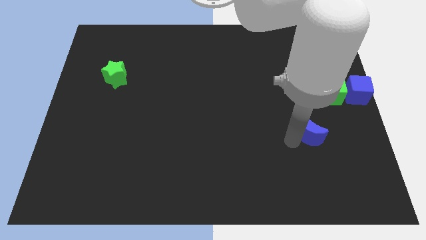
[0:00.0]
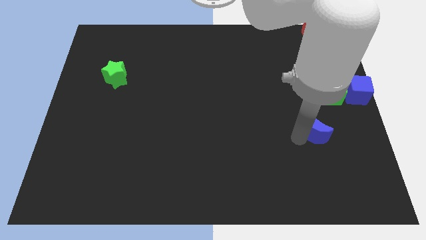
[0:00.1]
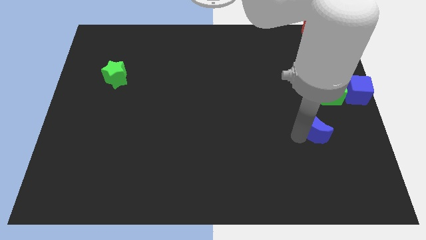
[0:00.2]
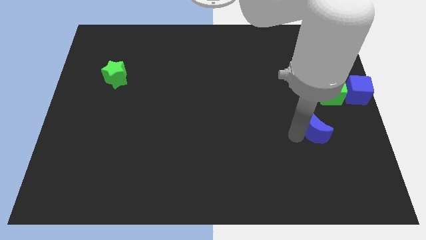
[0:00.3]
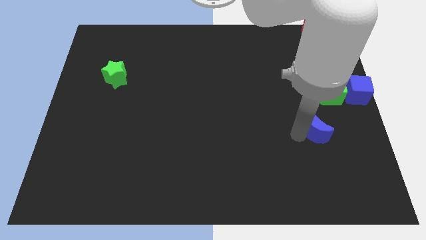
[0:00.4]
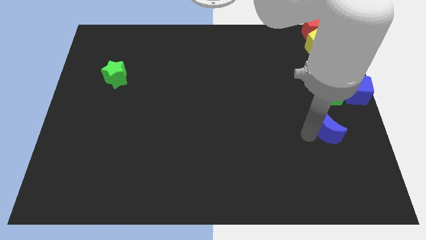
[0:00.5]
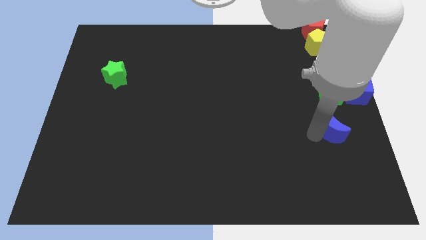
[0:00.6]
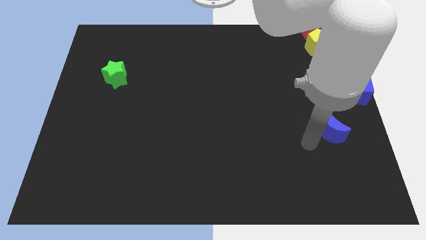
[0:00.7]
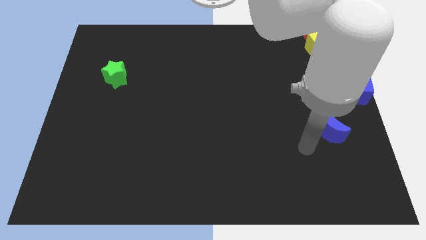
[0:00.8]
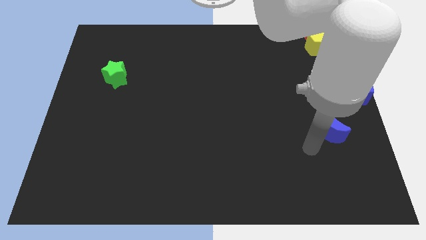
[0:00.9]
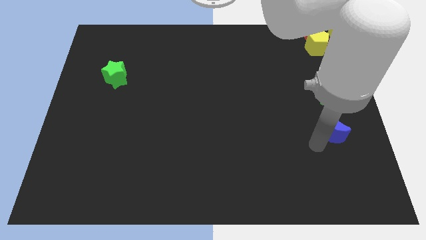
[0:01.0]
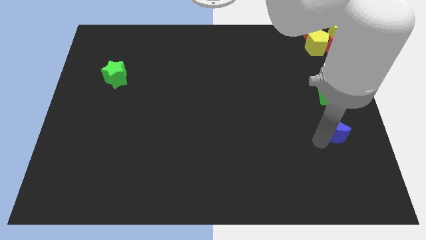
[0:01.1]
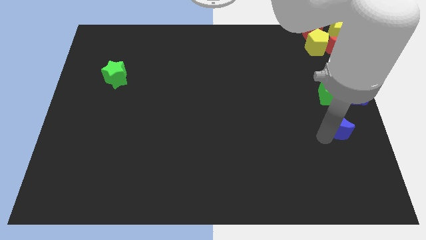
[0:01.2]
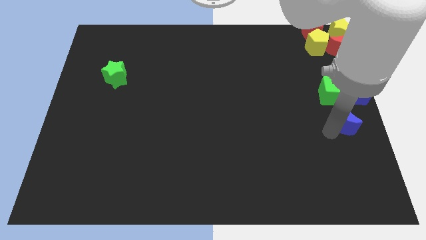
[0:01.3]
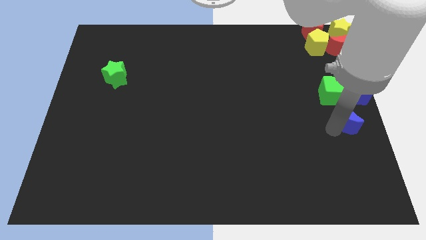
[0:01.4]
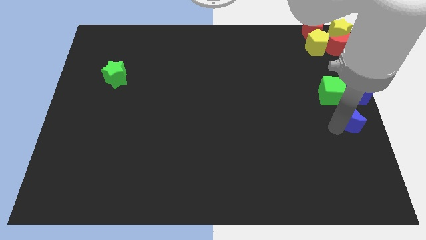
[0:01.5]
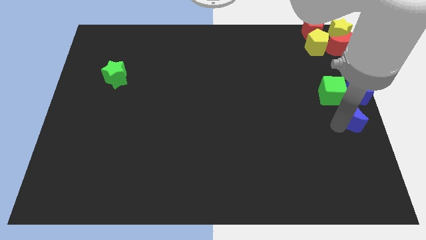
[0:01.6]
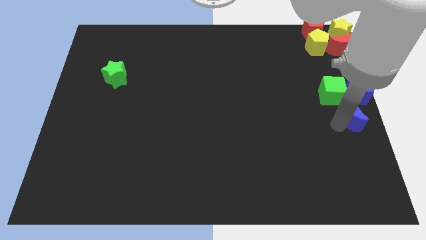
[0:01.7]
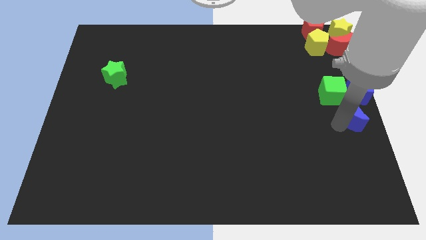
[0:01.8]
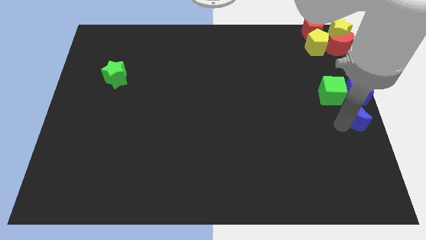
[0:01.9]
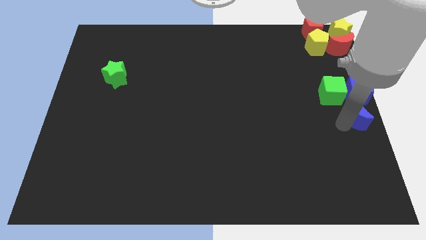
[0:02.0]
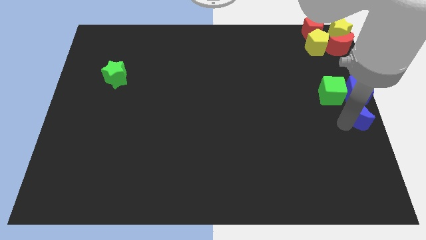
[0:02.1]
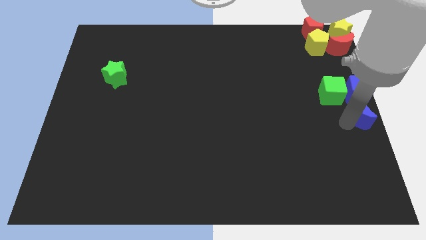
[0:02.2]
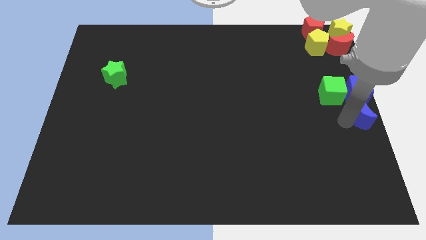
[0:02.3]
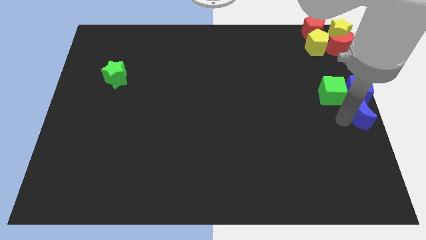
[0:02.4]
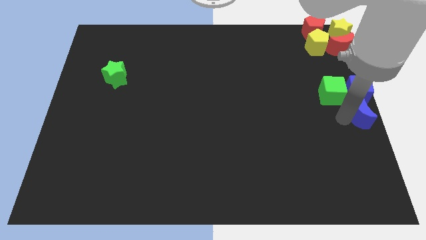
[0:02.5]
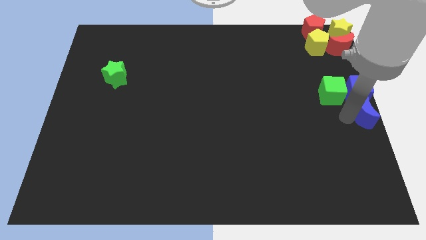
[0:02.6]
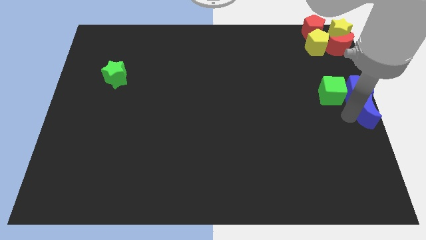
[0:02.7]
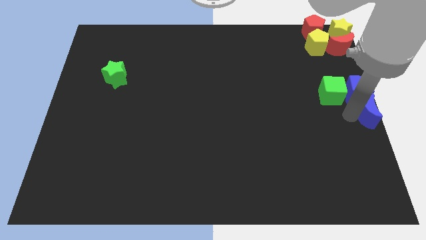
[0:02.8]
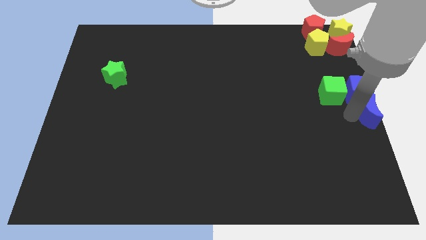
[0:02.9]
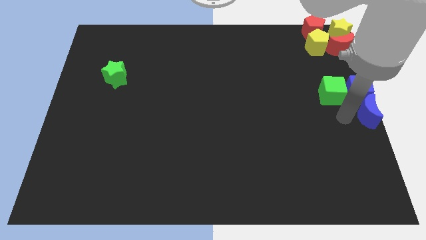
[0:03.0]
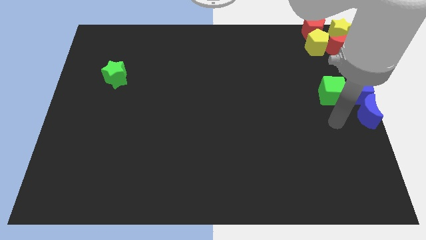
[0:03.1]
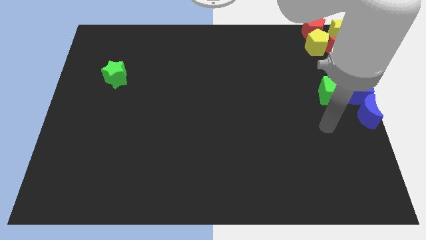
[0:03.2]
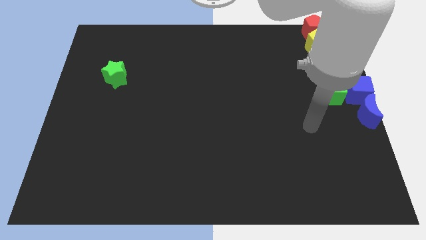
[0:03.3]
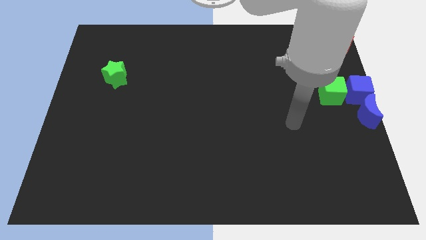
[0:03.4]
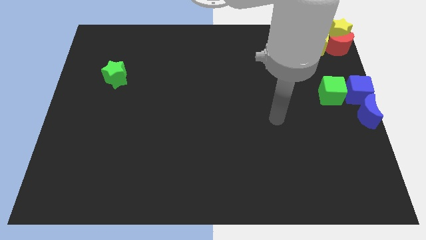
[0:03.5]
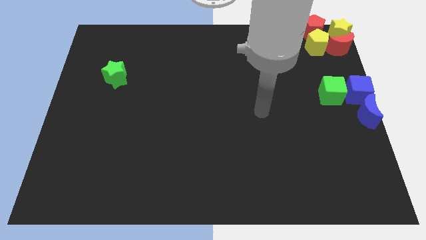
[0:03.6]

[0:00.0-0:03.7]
put the blue crescent to the bottom side of the blue cube

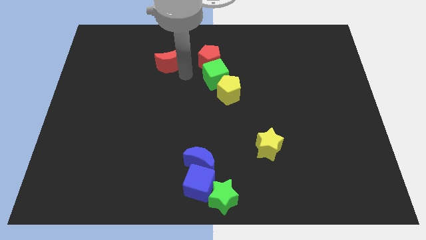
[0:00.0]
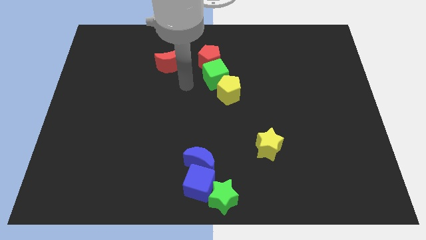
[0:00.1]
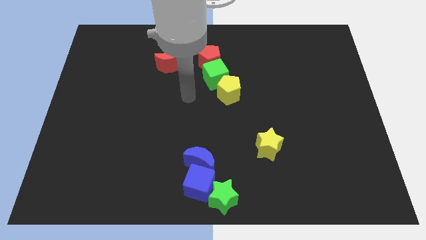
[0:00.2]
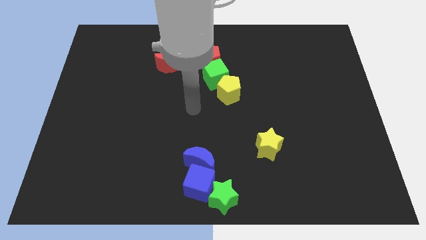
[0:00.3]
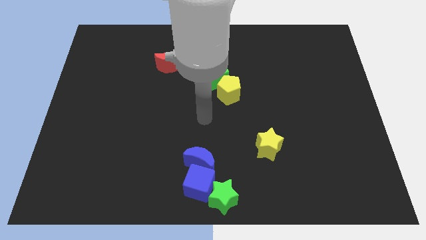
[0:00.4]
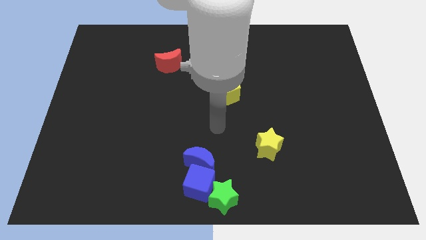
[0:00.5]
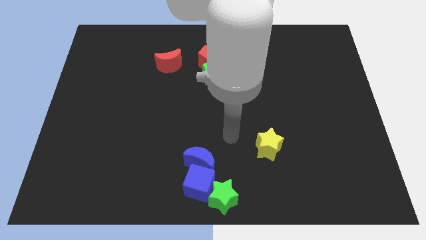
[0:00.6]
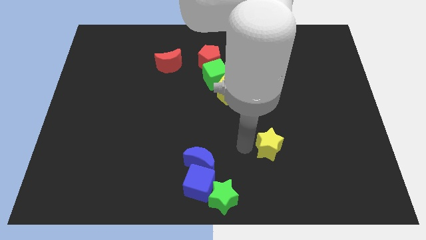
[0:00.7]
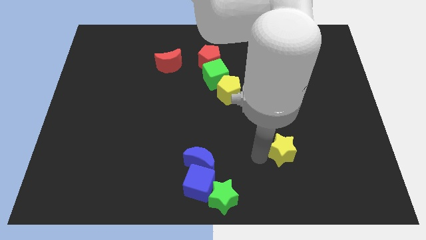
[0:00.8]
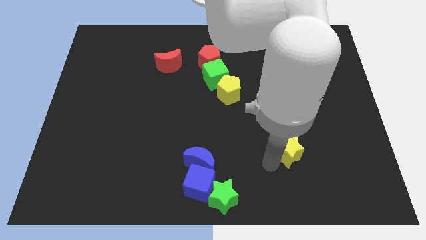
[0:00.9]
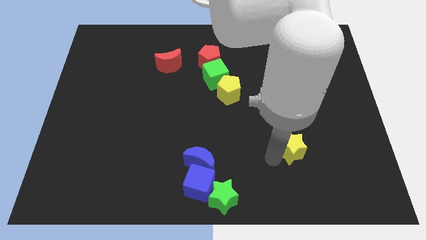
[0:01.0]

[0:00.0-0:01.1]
move the yellow star to the right

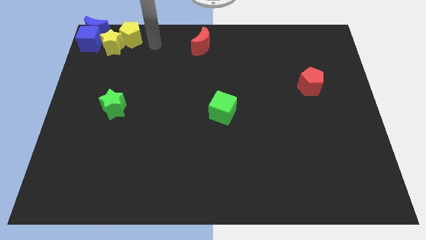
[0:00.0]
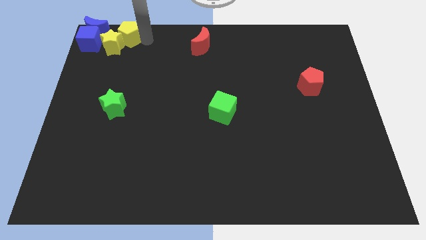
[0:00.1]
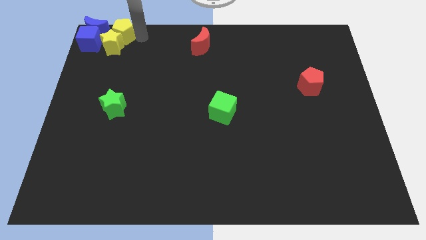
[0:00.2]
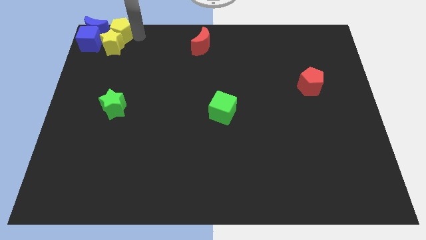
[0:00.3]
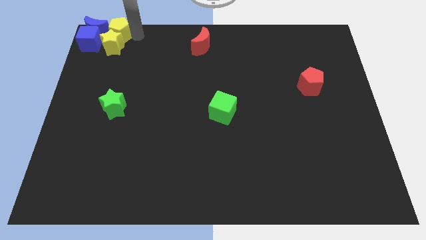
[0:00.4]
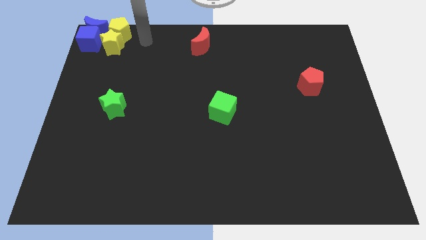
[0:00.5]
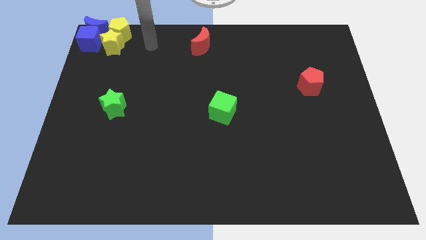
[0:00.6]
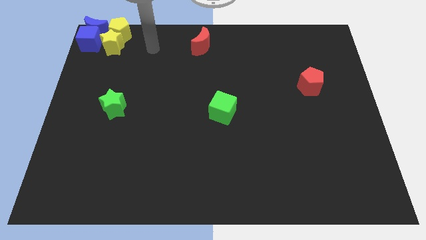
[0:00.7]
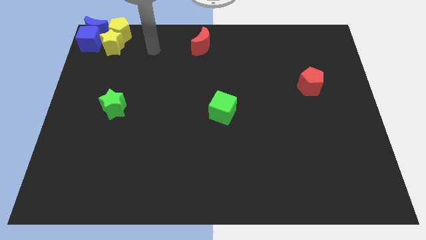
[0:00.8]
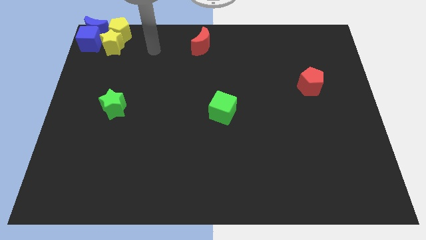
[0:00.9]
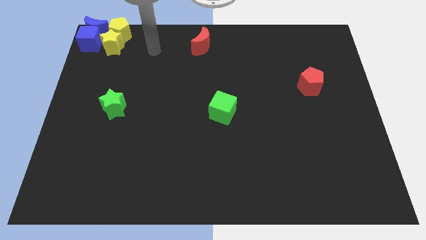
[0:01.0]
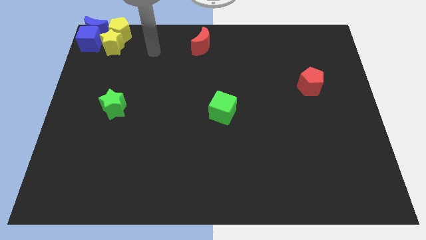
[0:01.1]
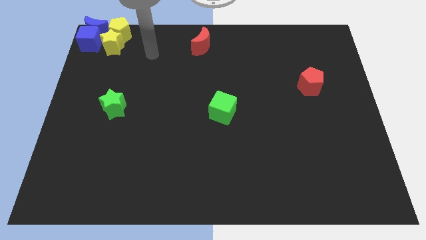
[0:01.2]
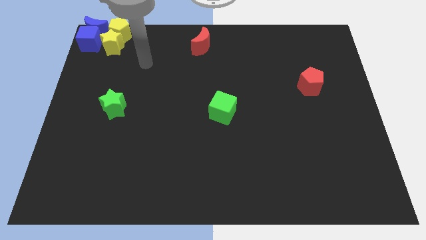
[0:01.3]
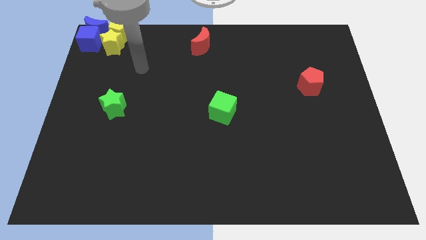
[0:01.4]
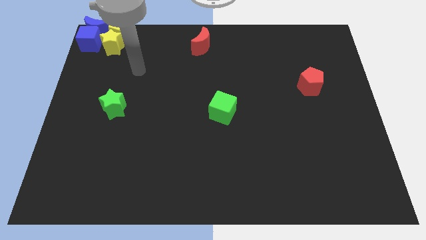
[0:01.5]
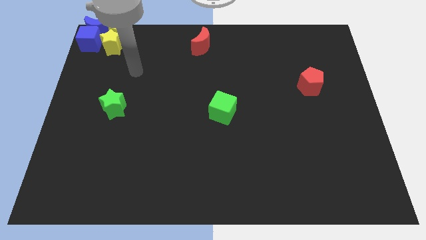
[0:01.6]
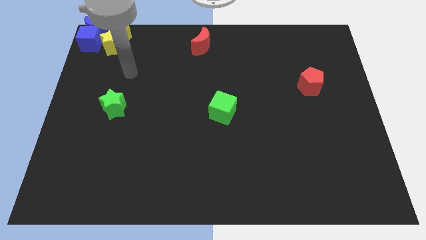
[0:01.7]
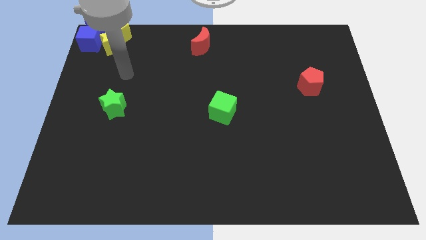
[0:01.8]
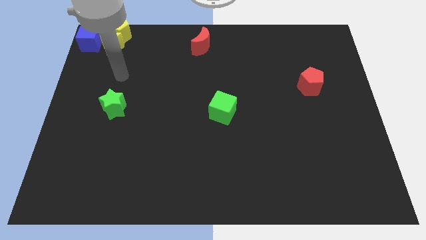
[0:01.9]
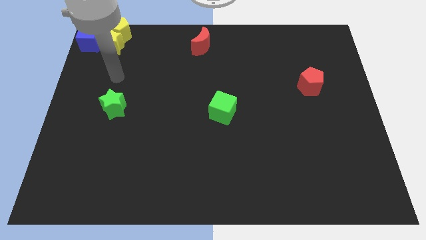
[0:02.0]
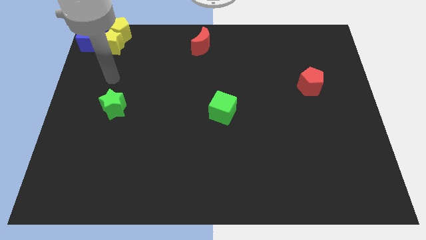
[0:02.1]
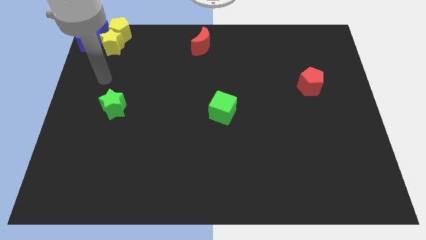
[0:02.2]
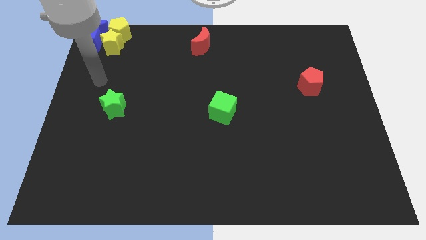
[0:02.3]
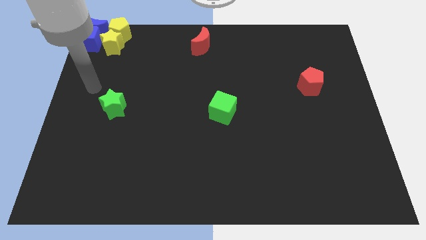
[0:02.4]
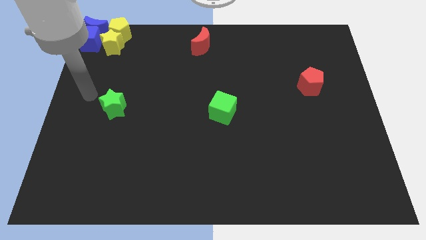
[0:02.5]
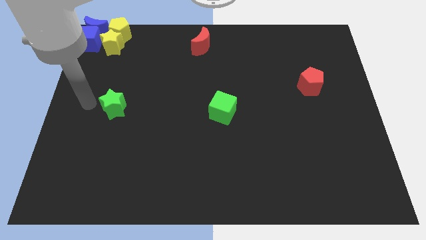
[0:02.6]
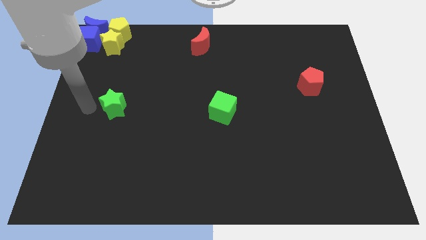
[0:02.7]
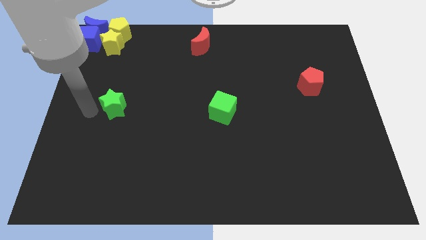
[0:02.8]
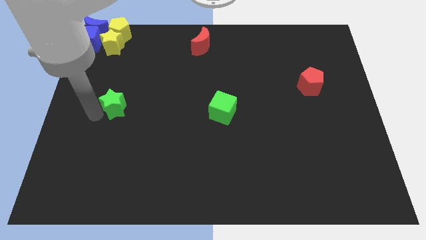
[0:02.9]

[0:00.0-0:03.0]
point your arm to the left of the green star

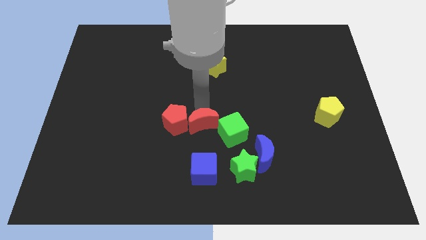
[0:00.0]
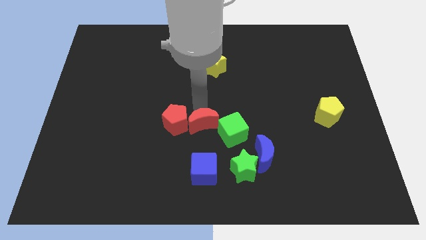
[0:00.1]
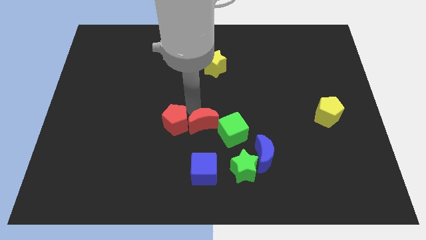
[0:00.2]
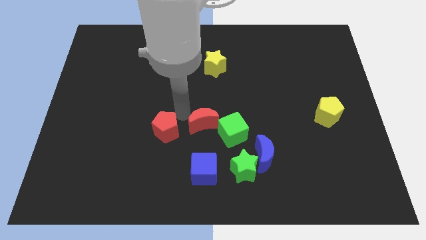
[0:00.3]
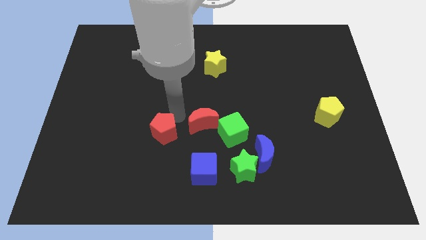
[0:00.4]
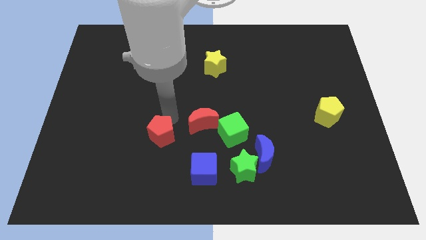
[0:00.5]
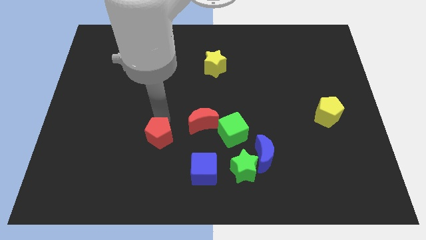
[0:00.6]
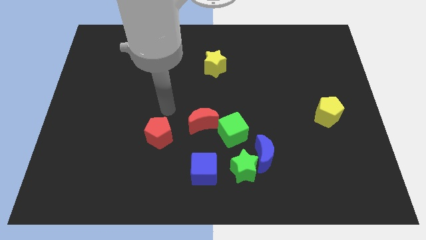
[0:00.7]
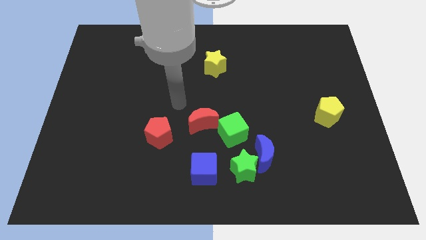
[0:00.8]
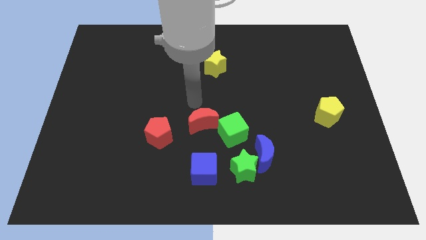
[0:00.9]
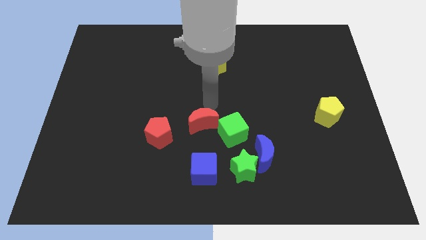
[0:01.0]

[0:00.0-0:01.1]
separate the red pentagon from the red moon
